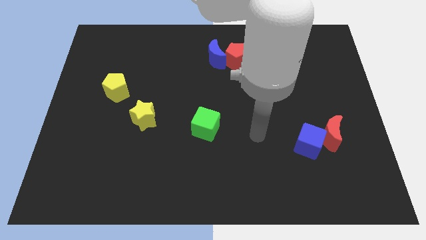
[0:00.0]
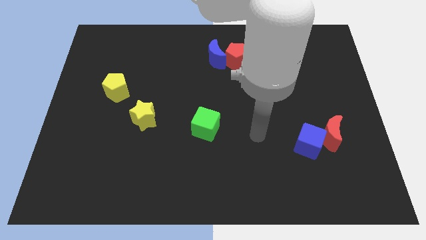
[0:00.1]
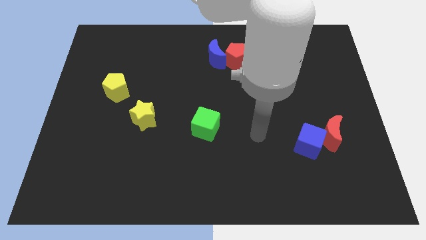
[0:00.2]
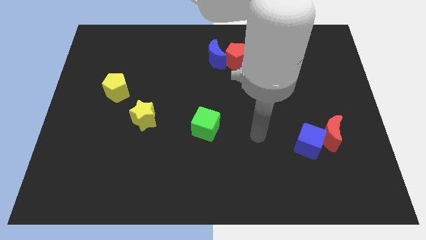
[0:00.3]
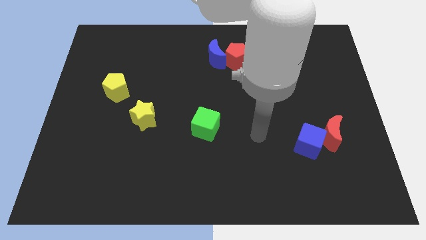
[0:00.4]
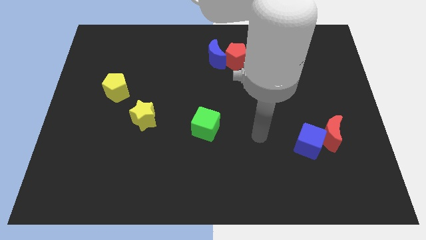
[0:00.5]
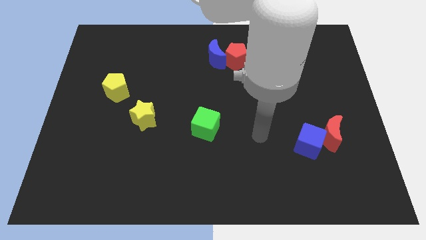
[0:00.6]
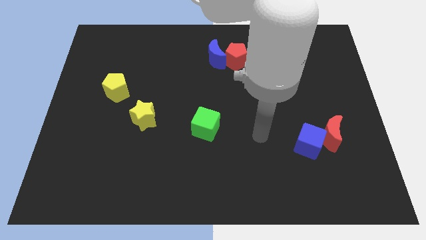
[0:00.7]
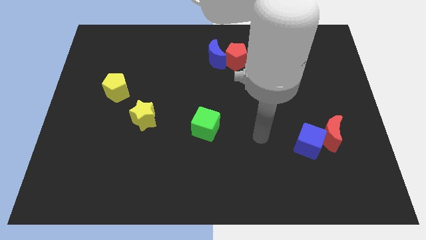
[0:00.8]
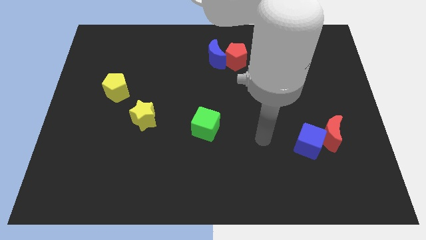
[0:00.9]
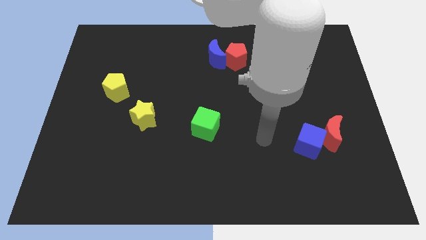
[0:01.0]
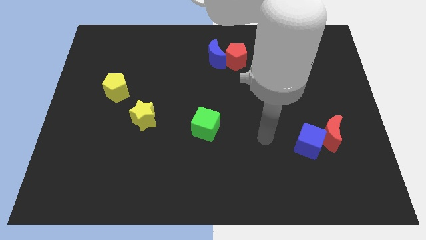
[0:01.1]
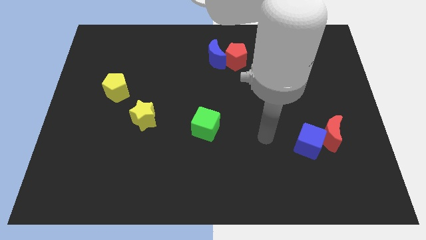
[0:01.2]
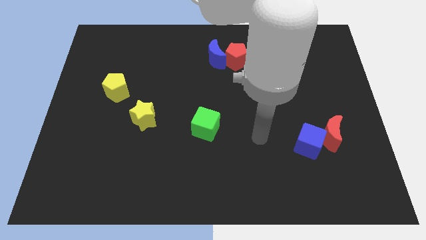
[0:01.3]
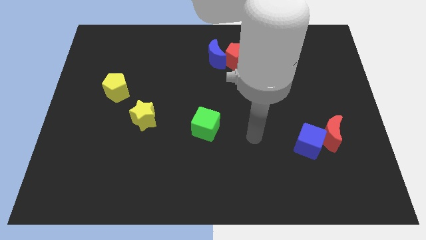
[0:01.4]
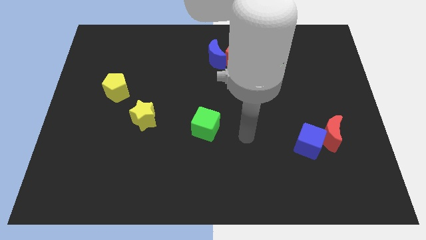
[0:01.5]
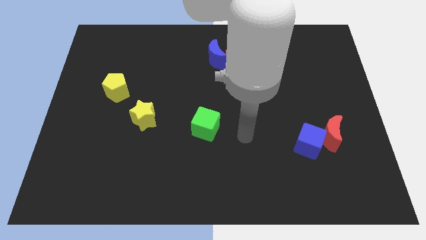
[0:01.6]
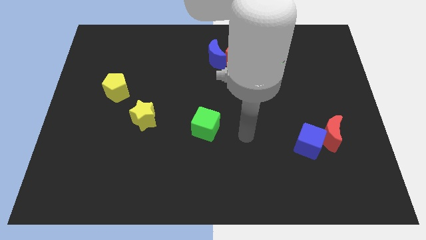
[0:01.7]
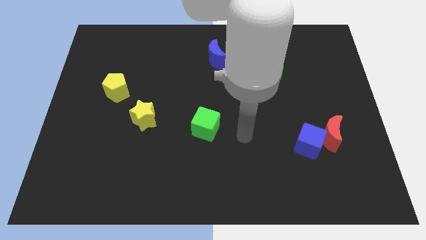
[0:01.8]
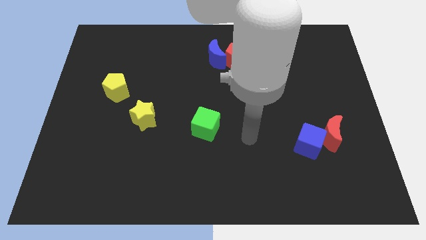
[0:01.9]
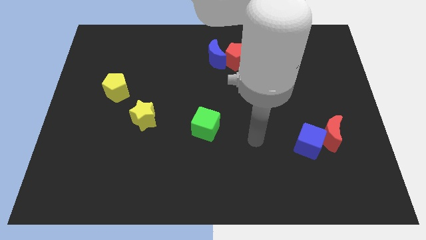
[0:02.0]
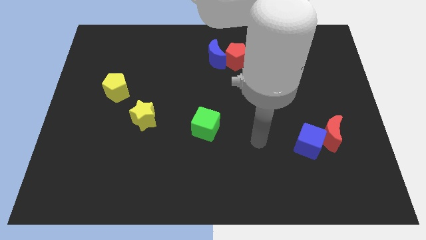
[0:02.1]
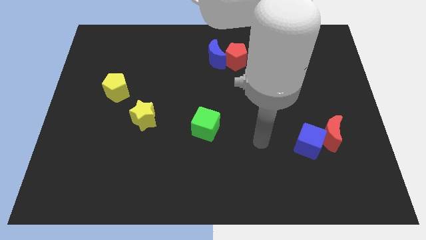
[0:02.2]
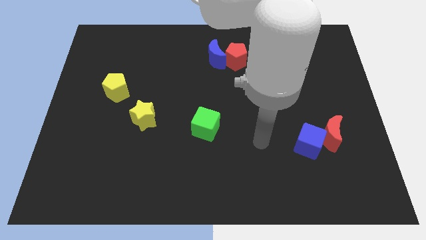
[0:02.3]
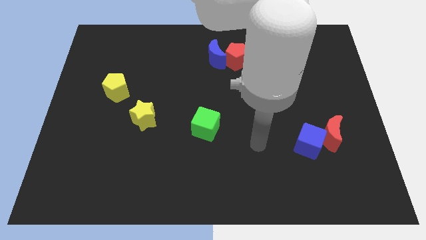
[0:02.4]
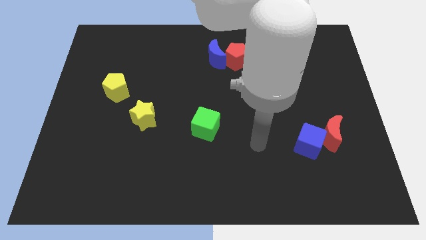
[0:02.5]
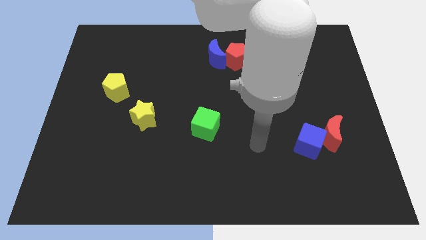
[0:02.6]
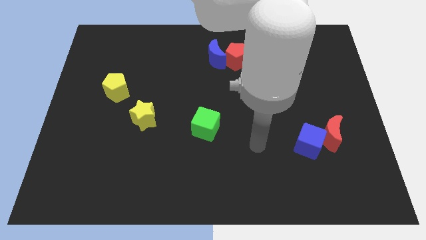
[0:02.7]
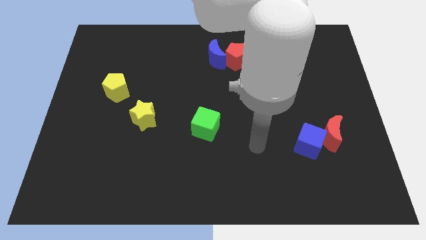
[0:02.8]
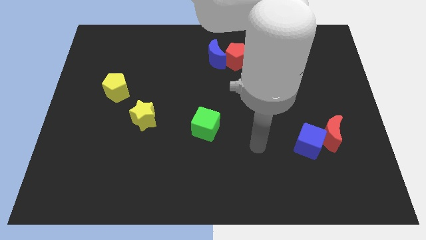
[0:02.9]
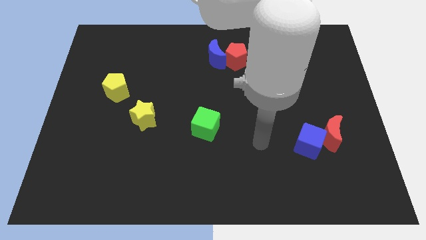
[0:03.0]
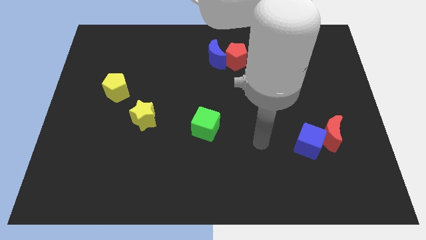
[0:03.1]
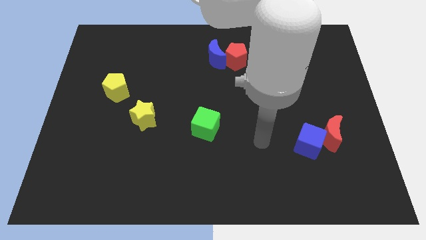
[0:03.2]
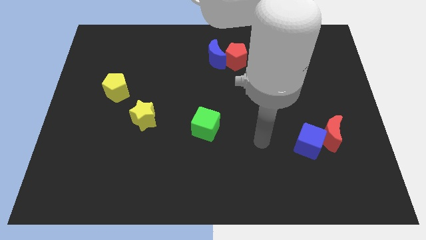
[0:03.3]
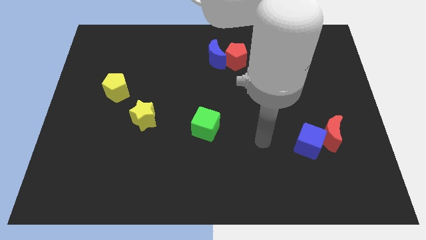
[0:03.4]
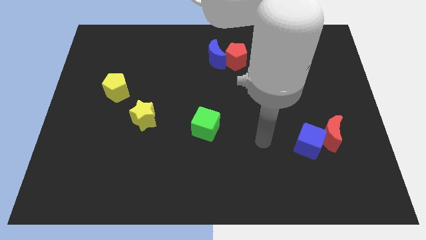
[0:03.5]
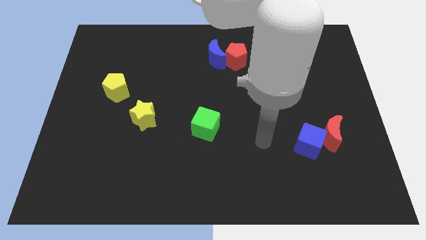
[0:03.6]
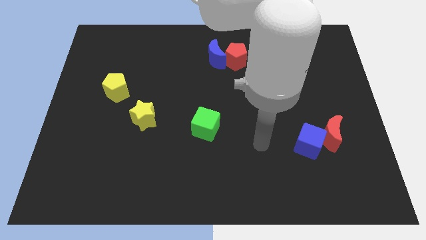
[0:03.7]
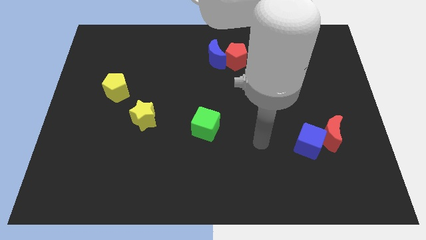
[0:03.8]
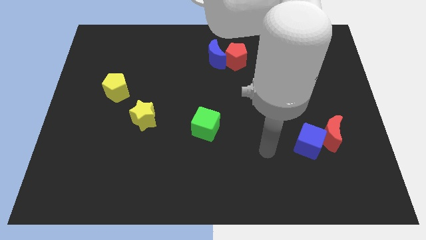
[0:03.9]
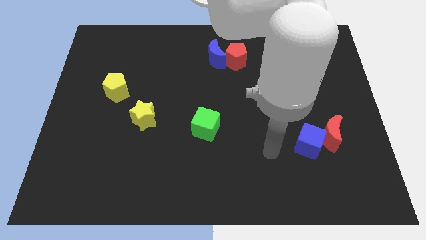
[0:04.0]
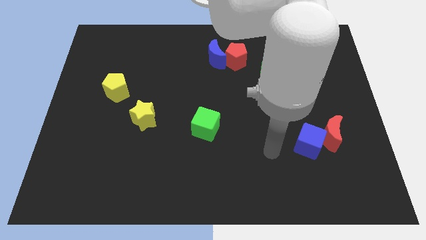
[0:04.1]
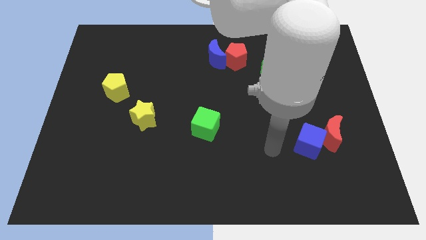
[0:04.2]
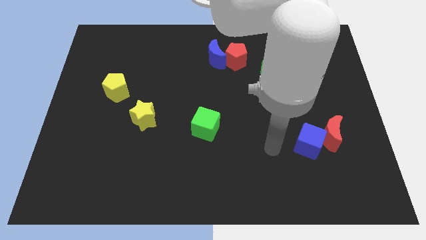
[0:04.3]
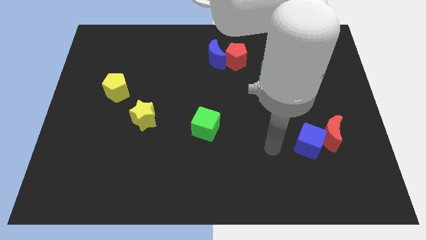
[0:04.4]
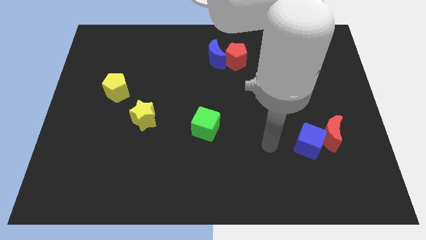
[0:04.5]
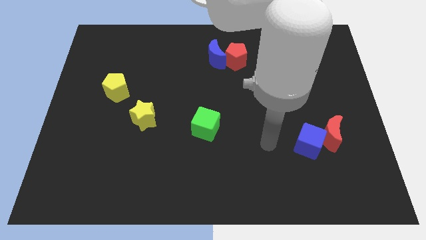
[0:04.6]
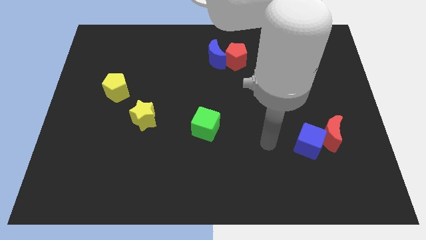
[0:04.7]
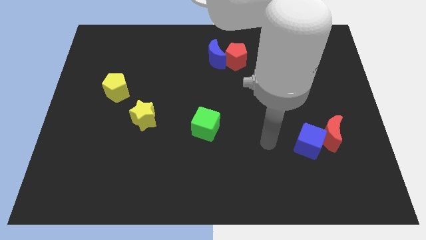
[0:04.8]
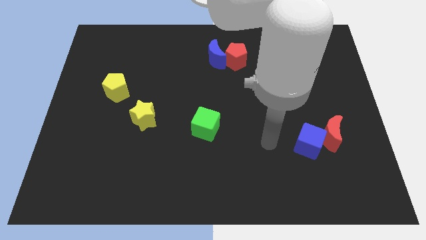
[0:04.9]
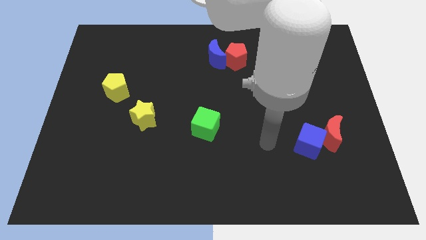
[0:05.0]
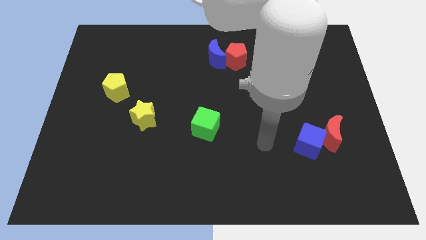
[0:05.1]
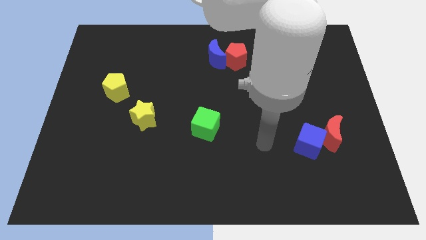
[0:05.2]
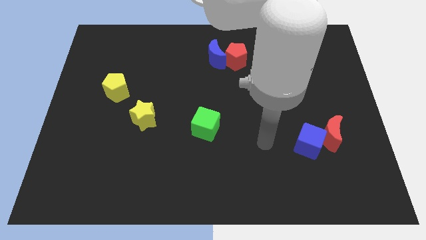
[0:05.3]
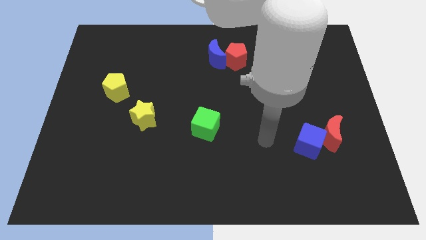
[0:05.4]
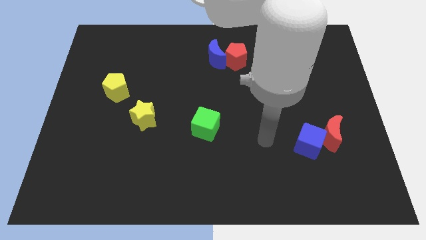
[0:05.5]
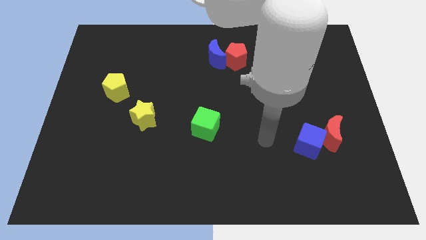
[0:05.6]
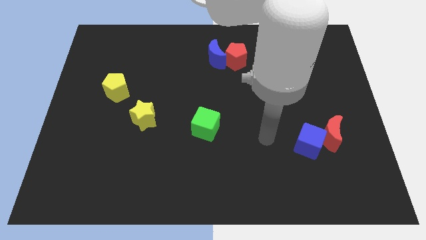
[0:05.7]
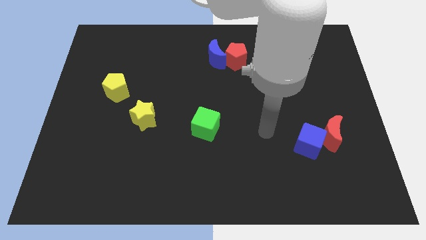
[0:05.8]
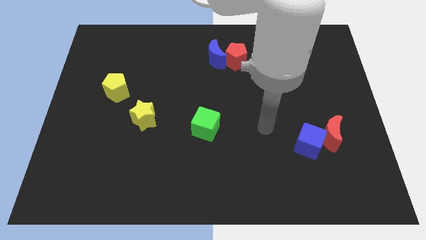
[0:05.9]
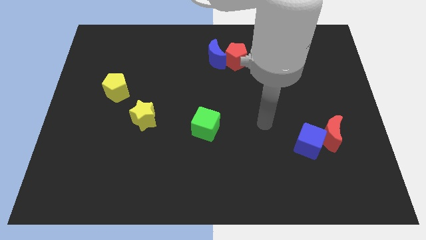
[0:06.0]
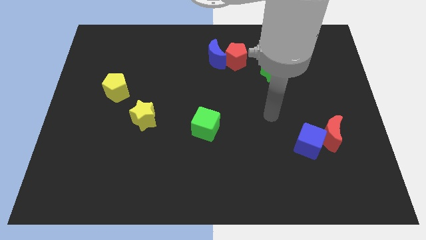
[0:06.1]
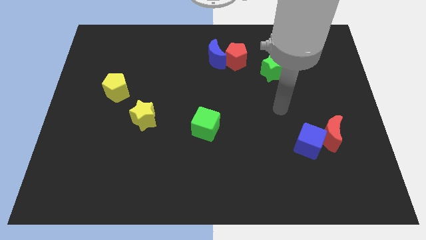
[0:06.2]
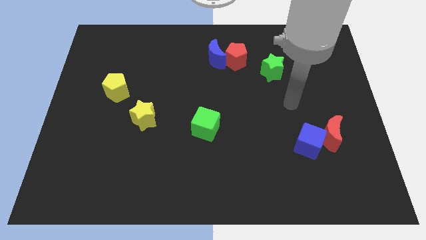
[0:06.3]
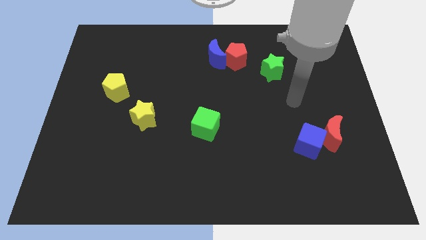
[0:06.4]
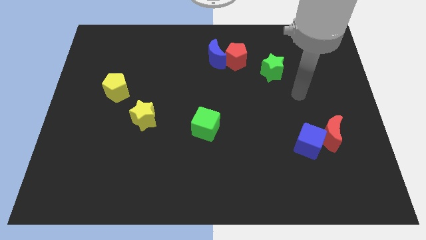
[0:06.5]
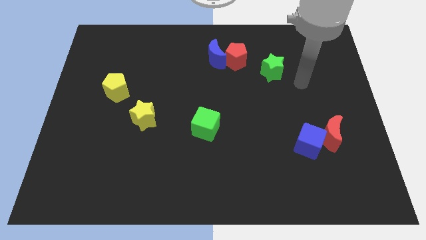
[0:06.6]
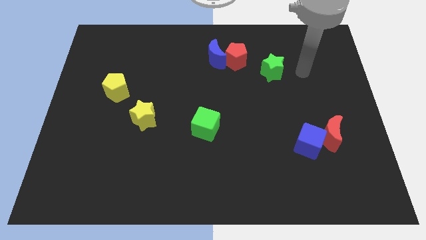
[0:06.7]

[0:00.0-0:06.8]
put your hand parallel right to the green star

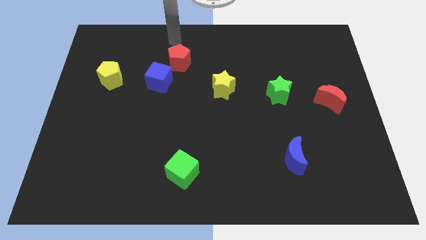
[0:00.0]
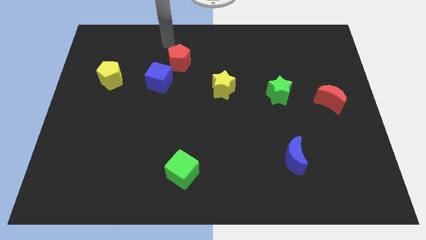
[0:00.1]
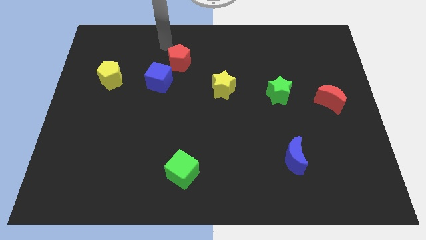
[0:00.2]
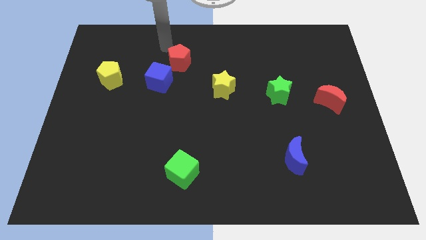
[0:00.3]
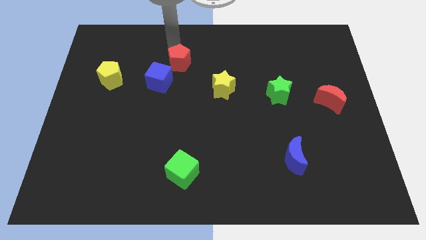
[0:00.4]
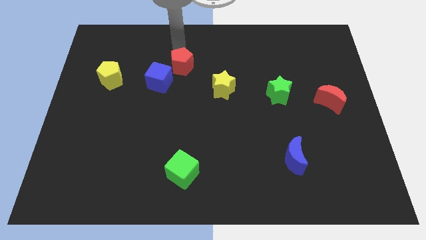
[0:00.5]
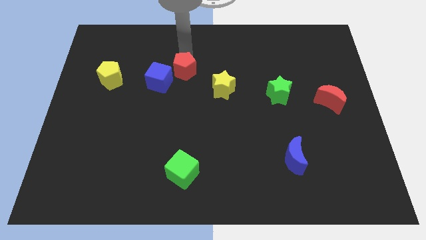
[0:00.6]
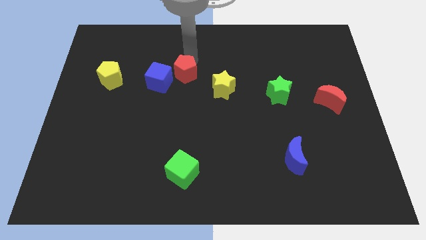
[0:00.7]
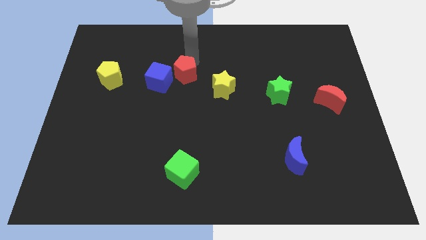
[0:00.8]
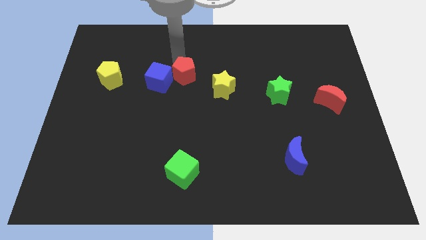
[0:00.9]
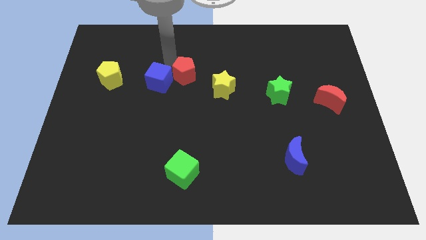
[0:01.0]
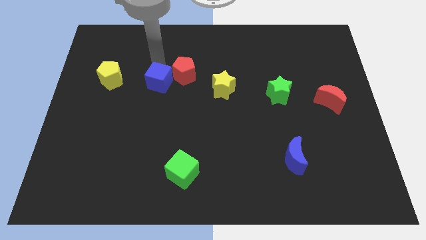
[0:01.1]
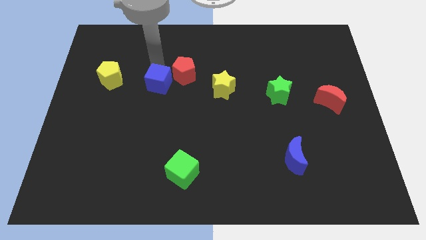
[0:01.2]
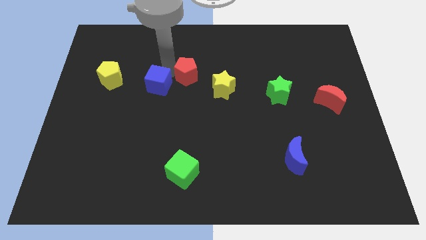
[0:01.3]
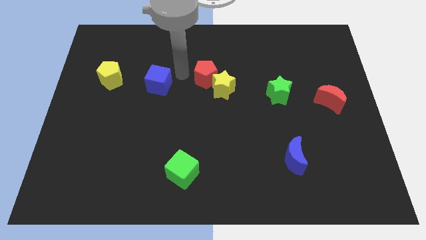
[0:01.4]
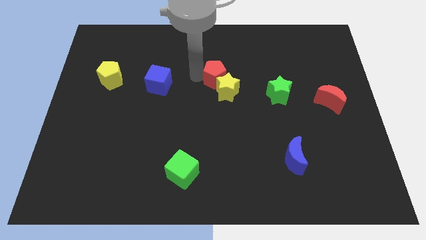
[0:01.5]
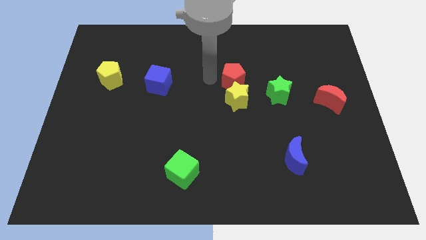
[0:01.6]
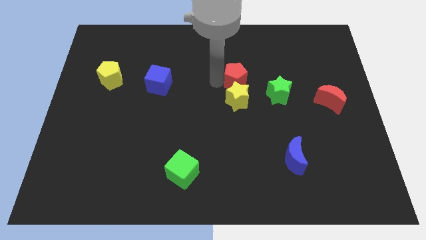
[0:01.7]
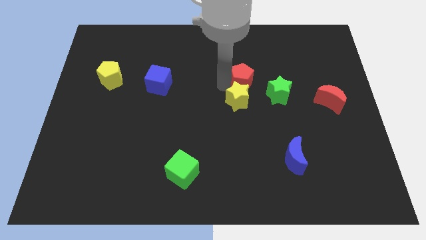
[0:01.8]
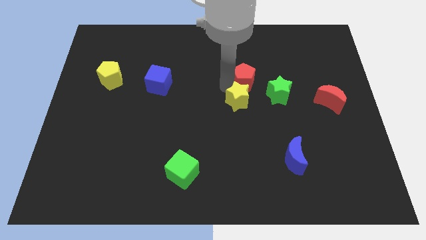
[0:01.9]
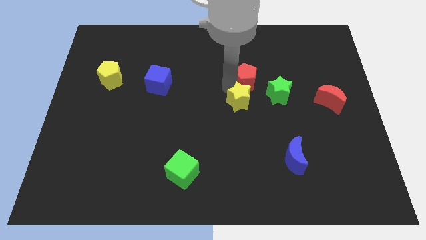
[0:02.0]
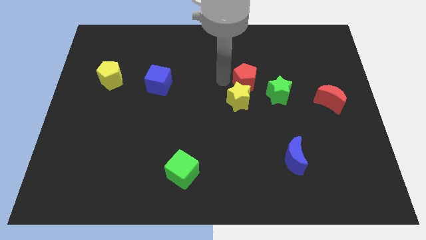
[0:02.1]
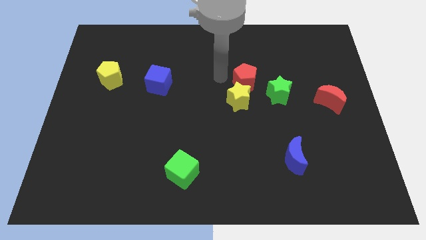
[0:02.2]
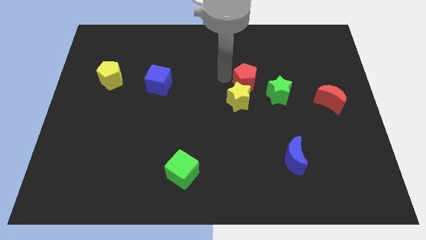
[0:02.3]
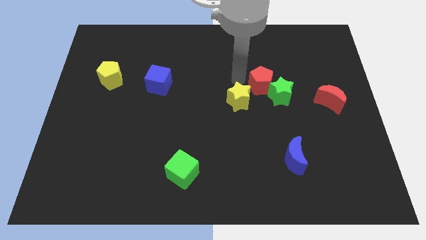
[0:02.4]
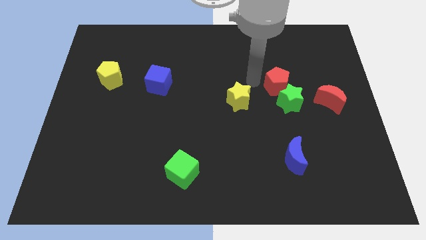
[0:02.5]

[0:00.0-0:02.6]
move the red pentagon into the yellow star
